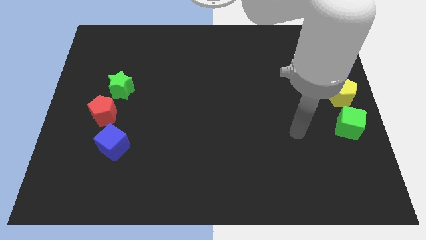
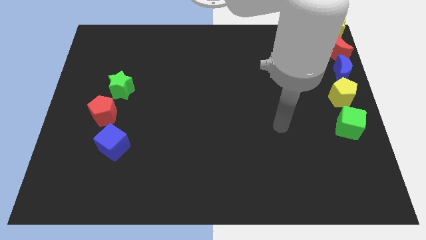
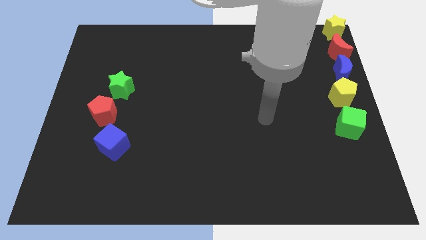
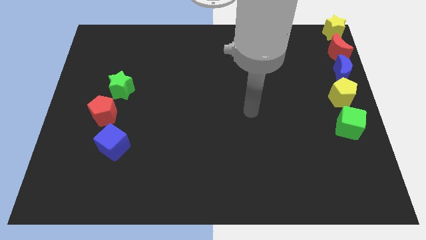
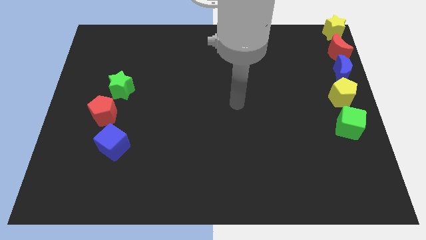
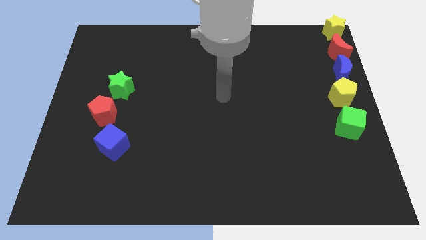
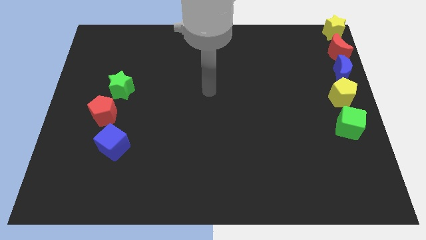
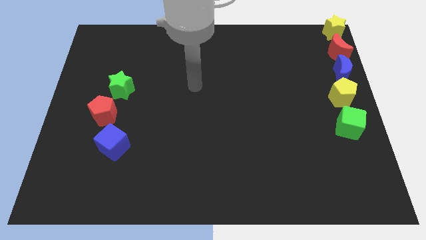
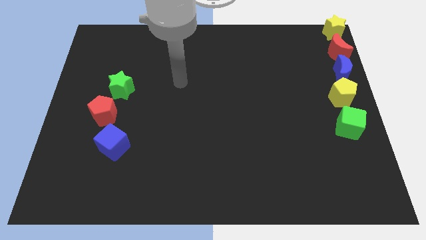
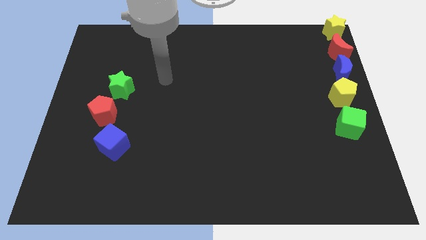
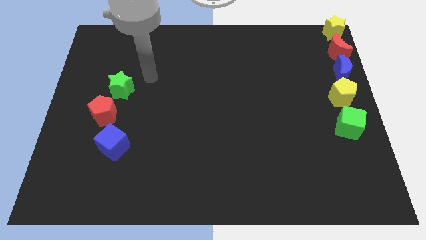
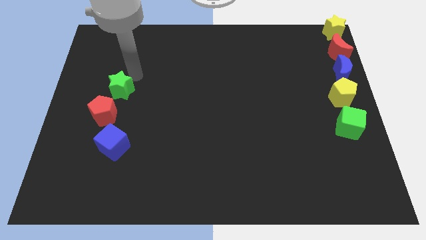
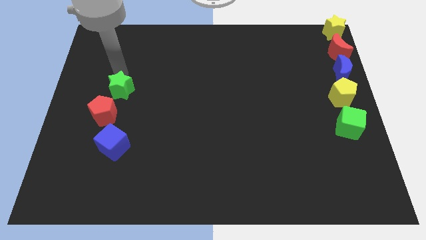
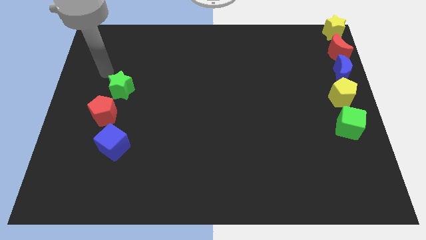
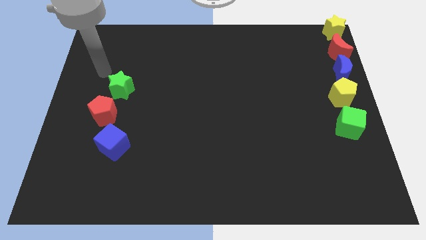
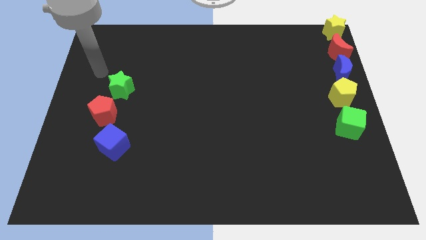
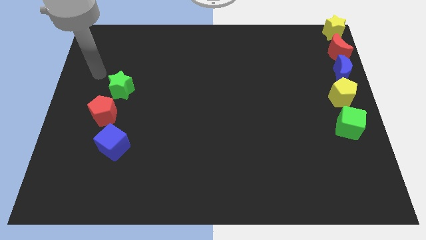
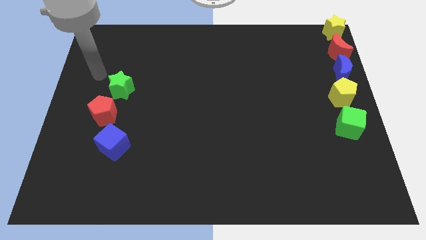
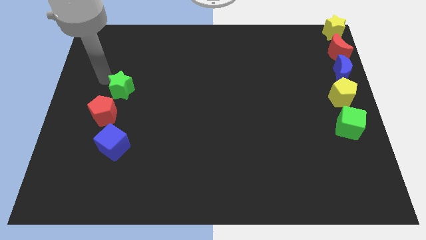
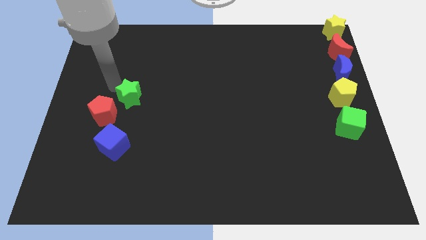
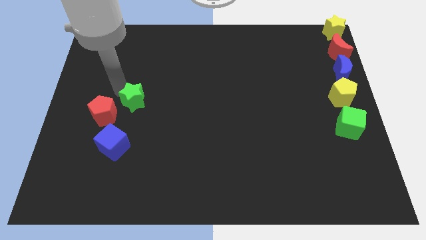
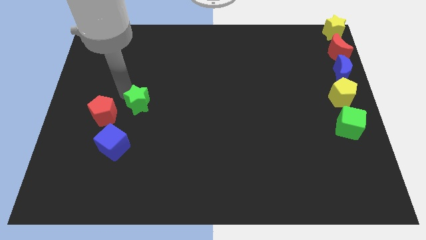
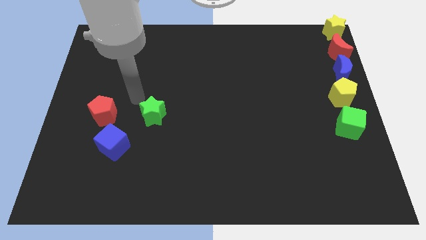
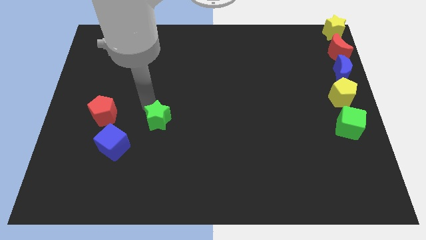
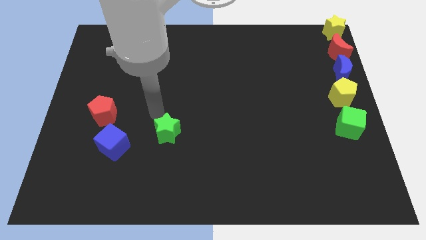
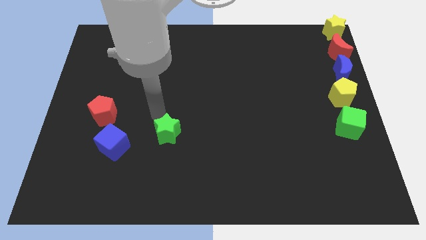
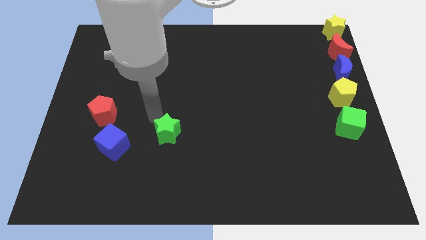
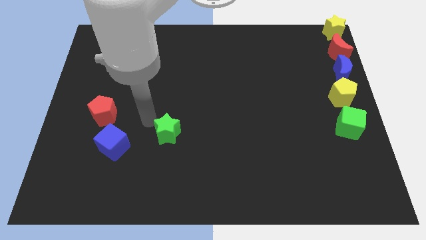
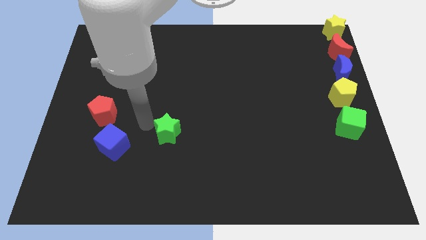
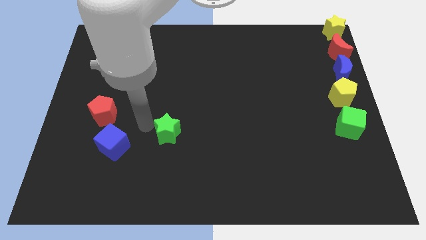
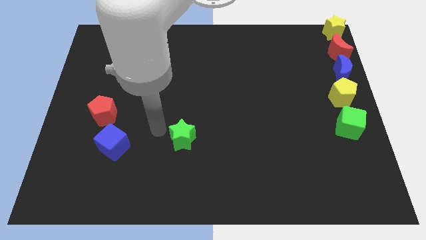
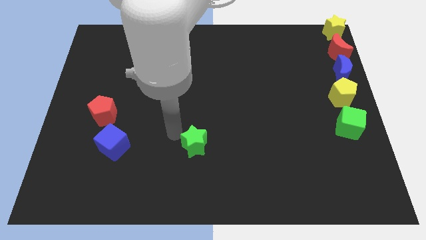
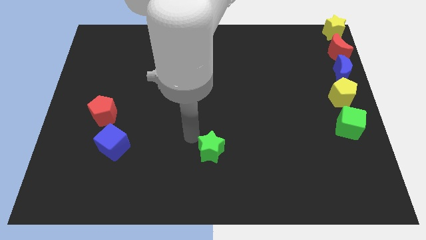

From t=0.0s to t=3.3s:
place the arm diagonally to the green star

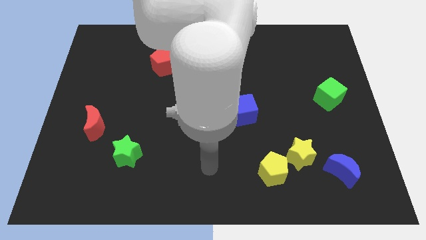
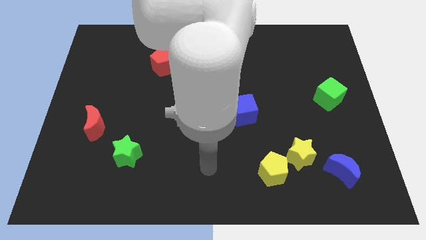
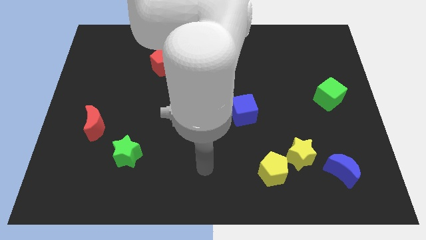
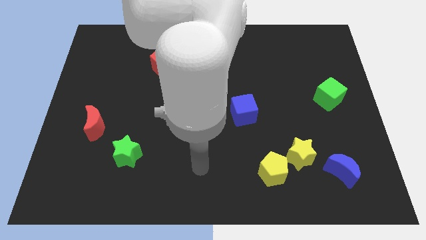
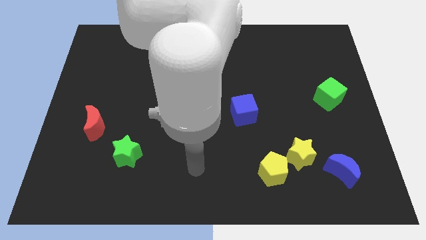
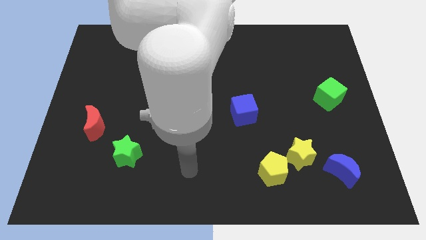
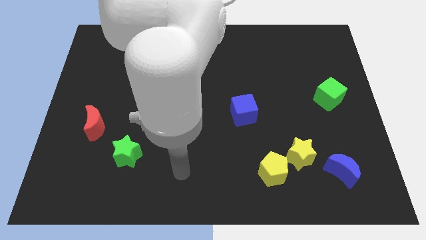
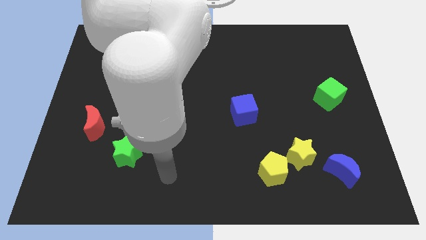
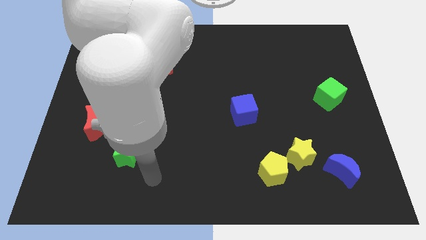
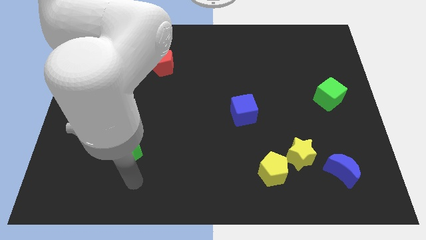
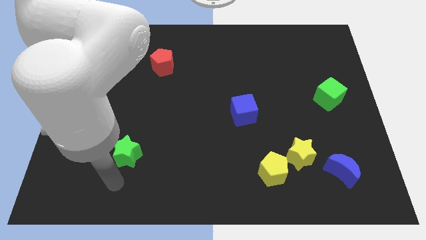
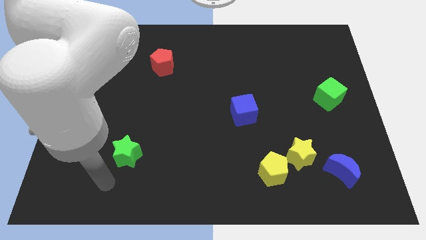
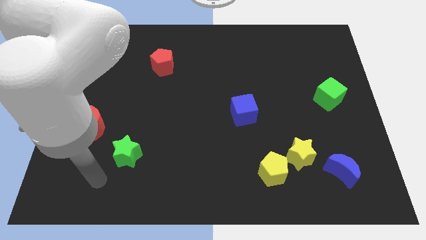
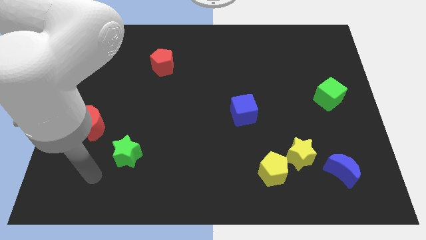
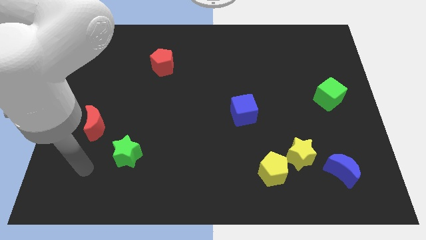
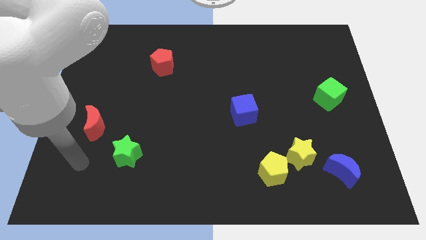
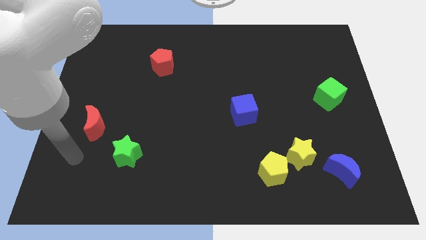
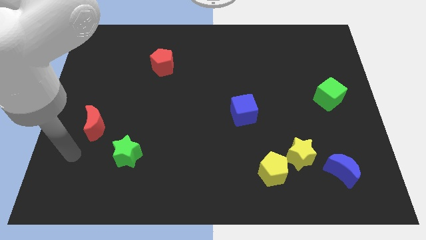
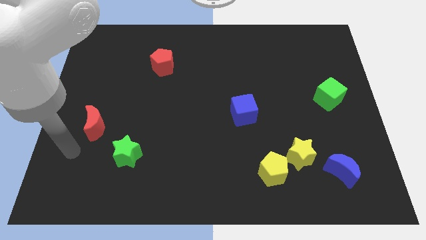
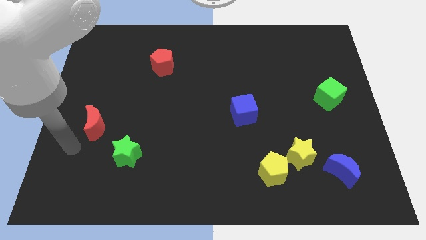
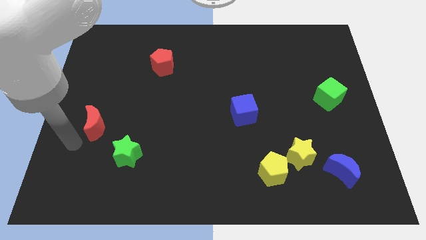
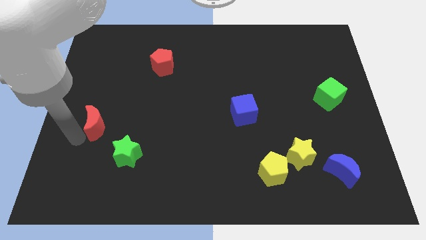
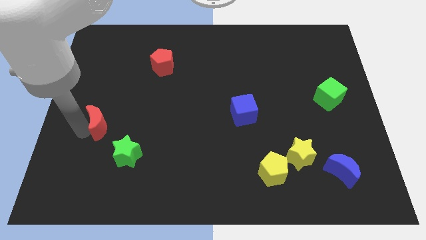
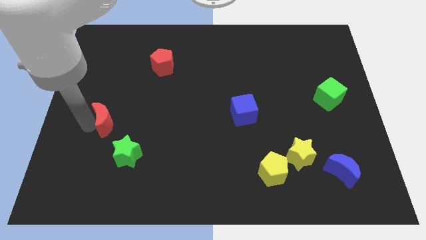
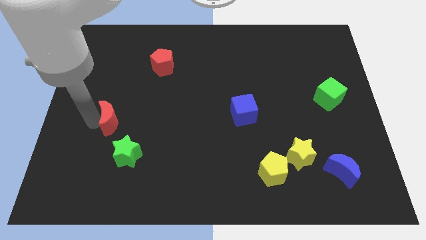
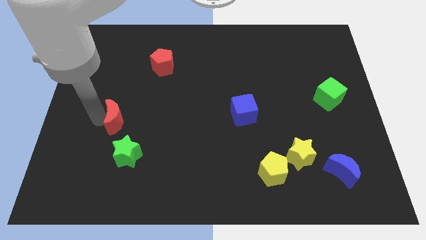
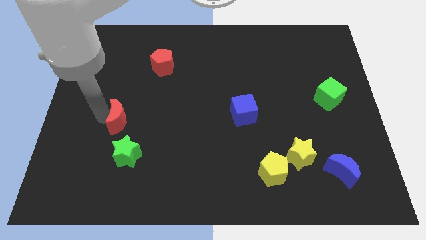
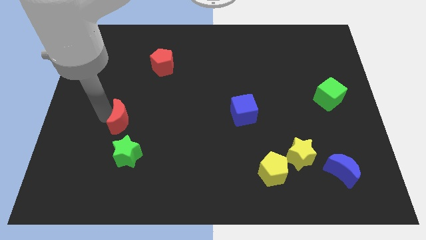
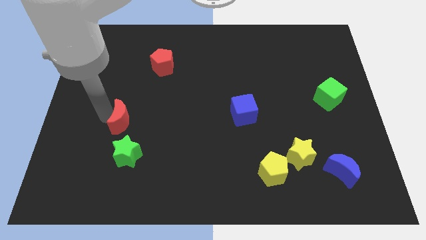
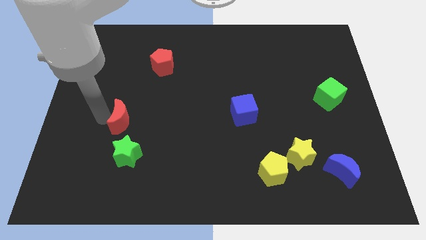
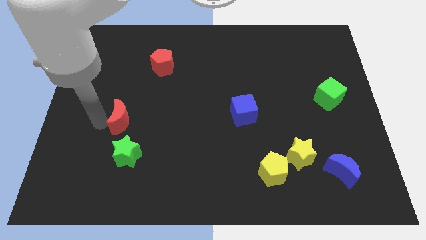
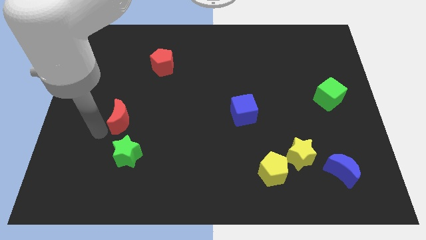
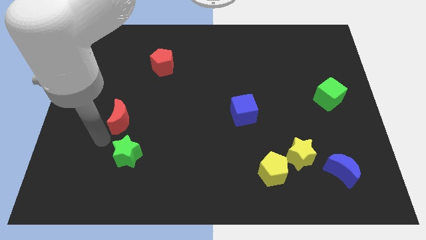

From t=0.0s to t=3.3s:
slightly move the red crescent to right side of the board

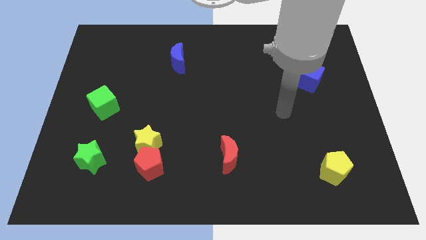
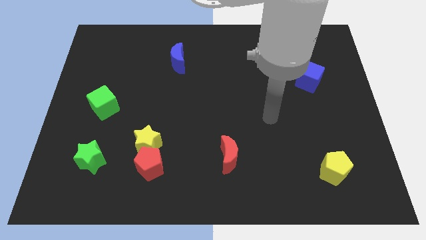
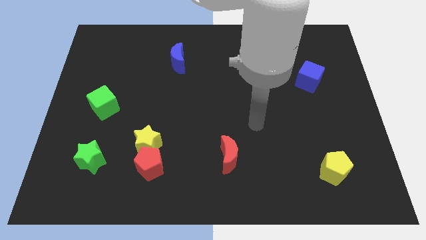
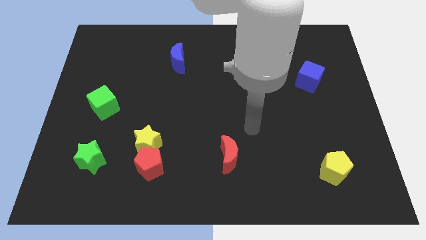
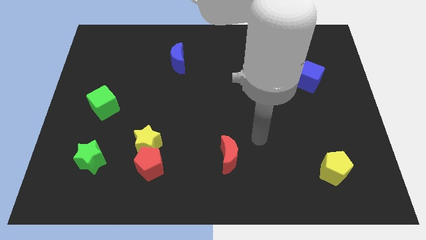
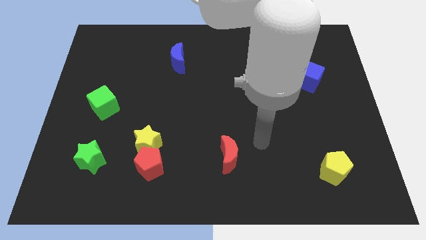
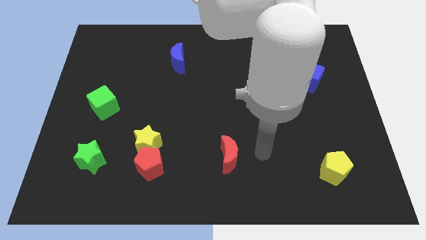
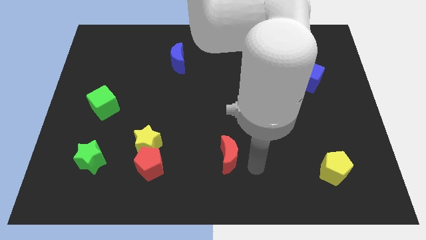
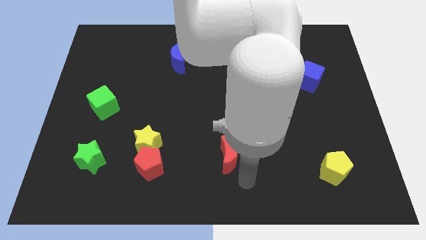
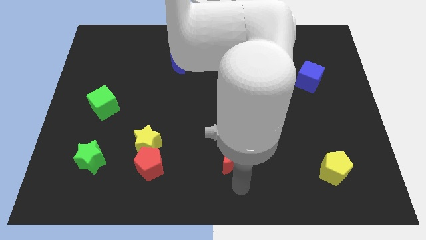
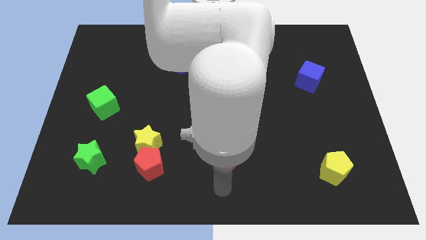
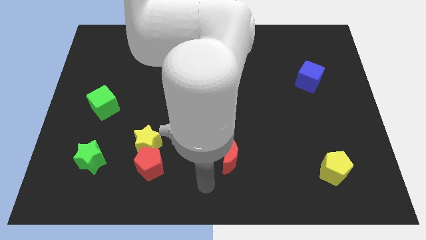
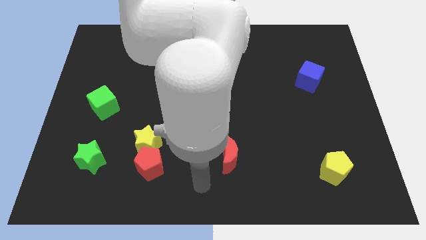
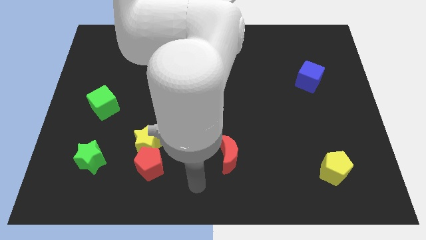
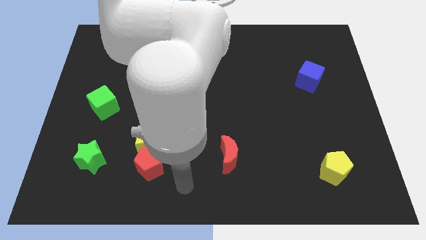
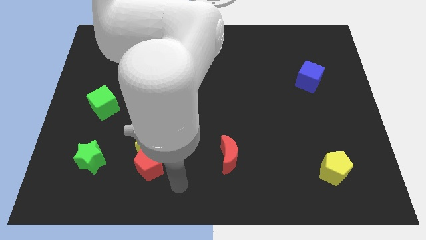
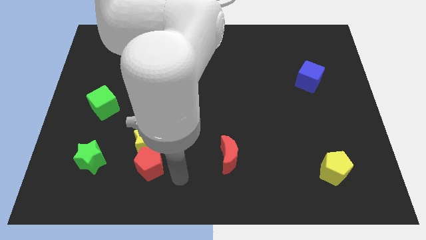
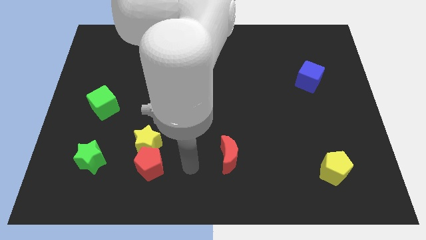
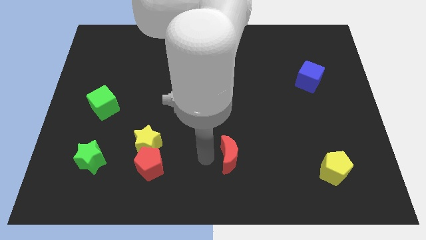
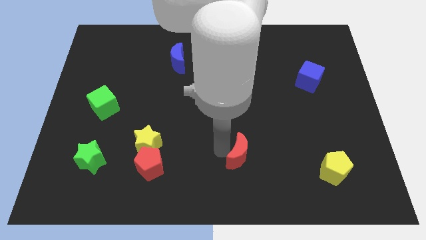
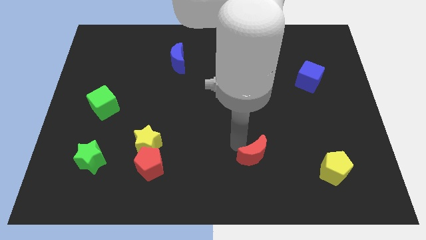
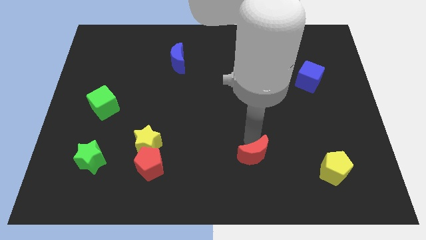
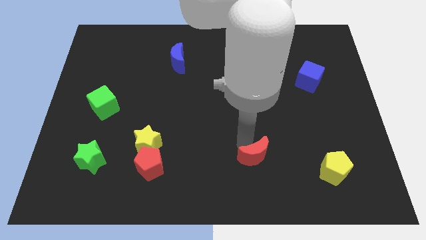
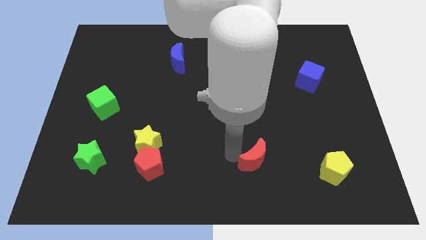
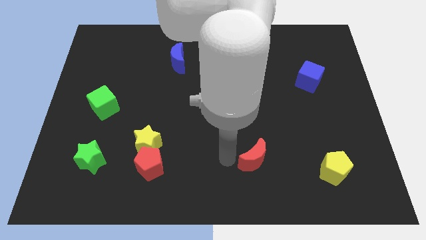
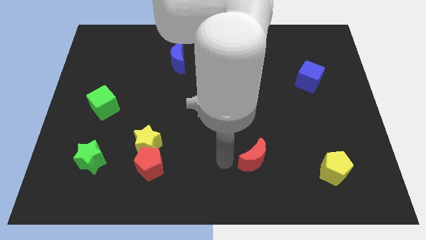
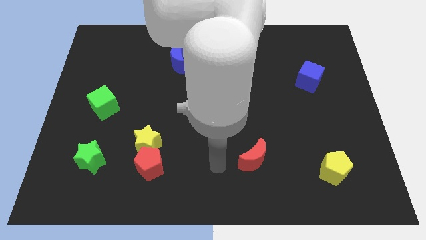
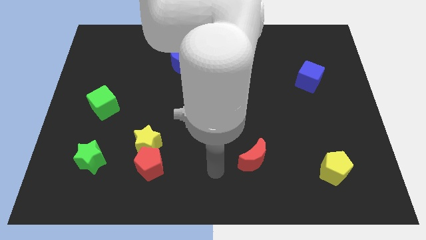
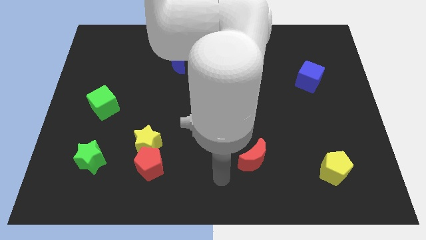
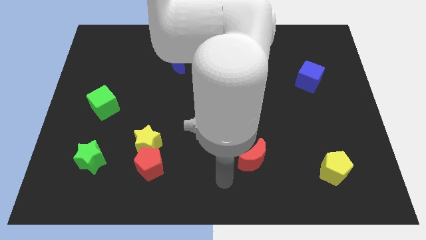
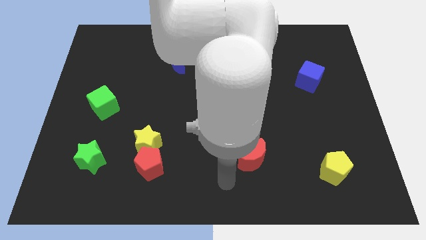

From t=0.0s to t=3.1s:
slide red moon slightly to the right
